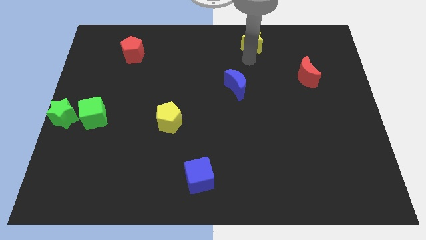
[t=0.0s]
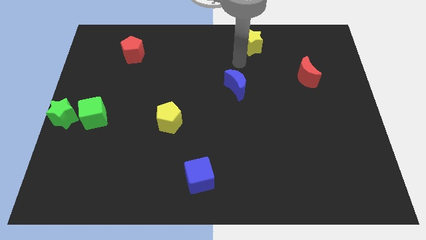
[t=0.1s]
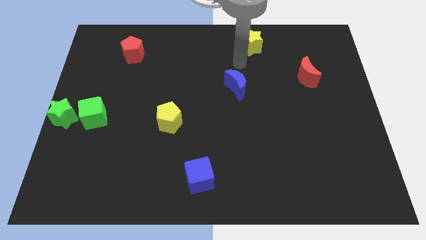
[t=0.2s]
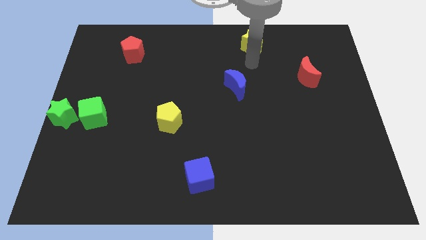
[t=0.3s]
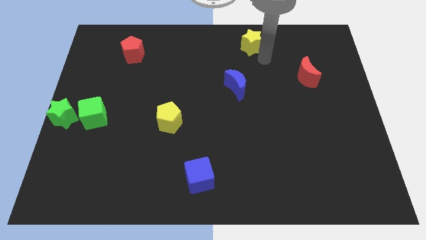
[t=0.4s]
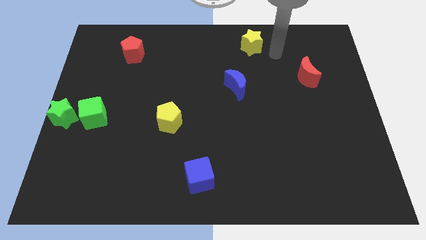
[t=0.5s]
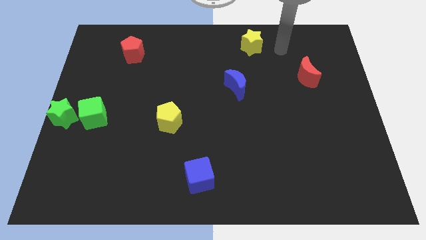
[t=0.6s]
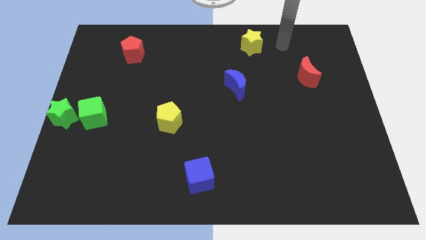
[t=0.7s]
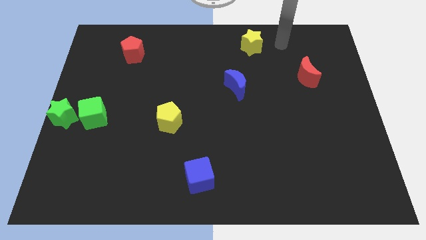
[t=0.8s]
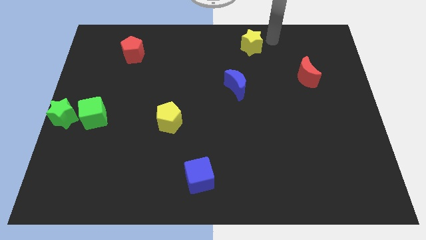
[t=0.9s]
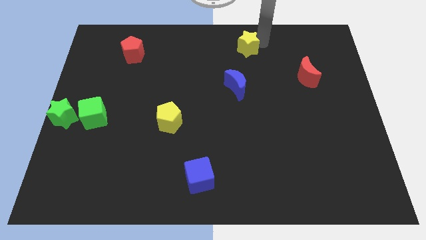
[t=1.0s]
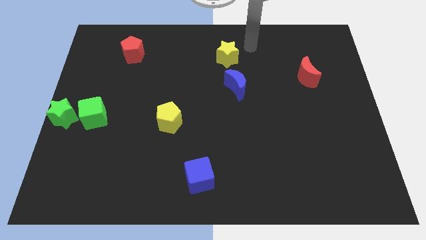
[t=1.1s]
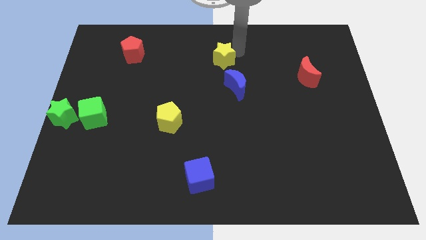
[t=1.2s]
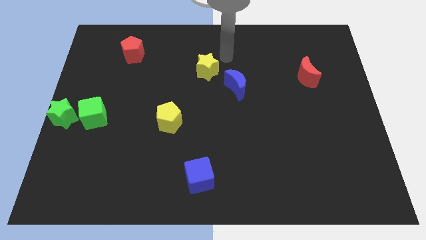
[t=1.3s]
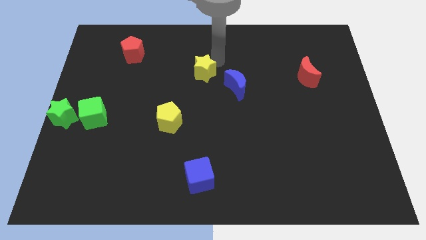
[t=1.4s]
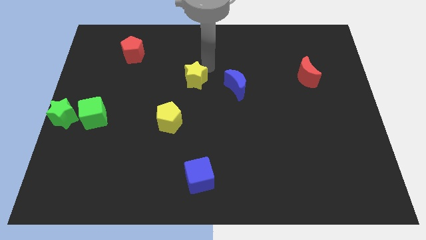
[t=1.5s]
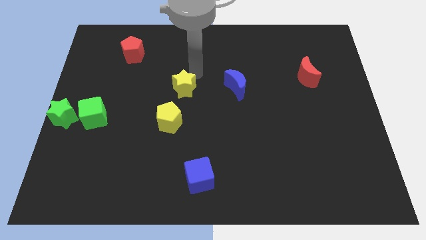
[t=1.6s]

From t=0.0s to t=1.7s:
move the yellow star to the left side of the blue moon

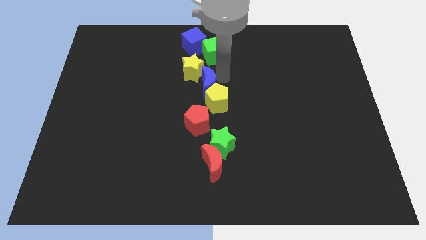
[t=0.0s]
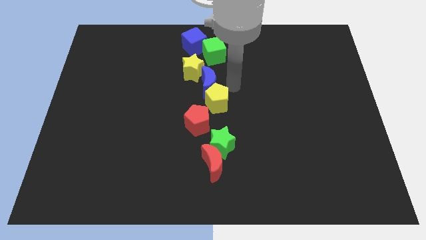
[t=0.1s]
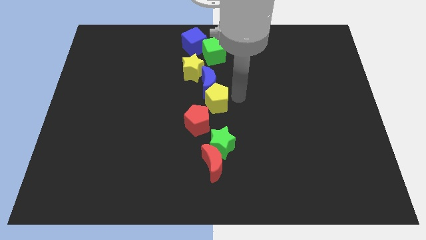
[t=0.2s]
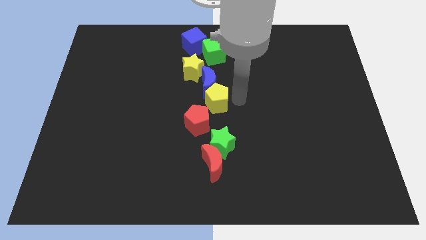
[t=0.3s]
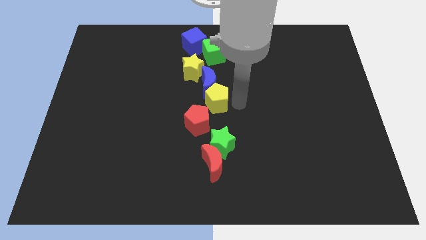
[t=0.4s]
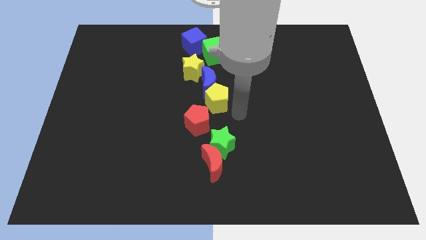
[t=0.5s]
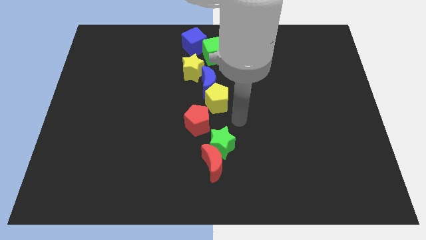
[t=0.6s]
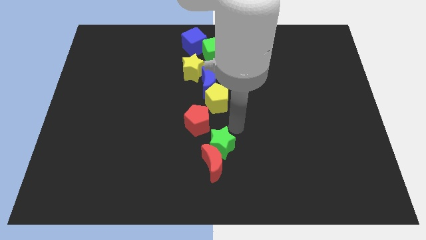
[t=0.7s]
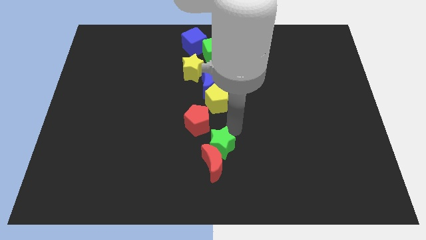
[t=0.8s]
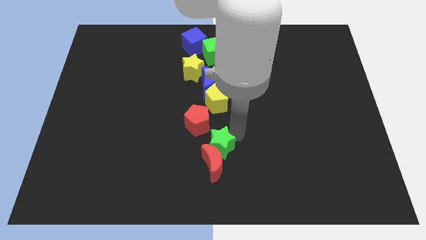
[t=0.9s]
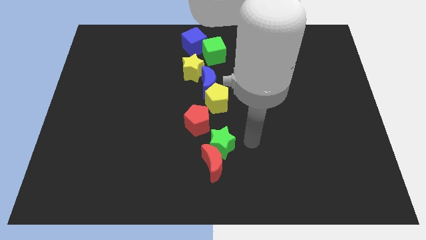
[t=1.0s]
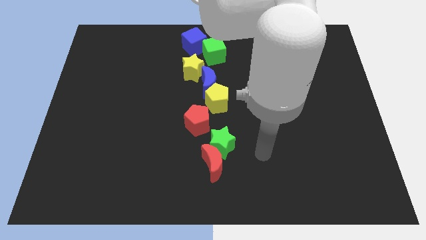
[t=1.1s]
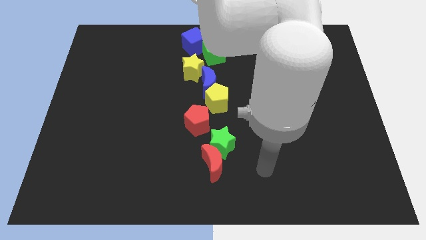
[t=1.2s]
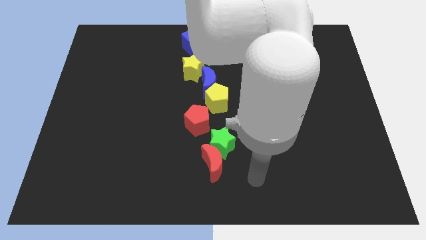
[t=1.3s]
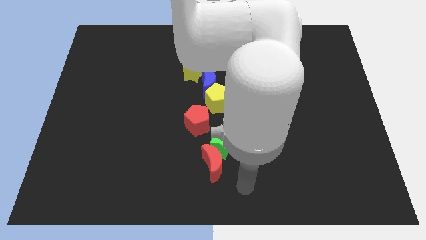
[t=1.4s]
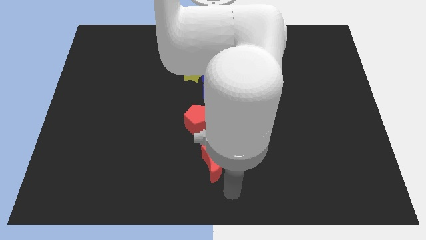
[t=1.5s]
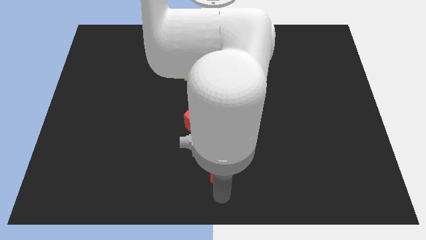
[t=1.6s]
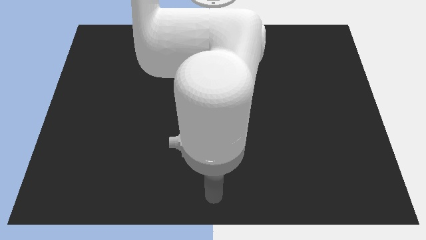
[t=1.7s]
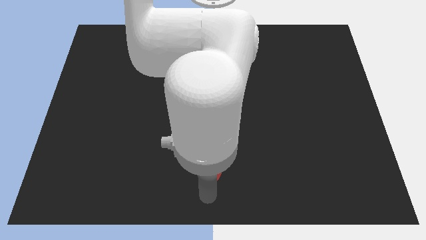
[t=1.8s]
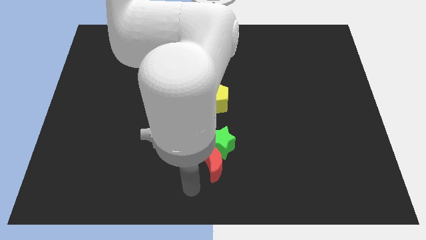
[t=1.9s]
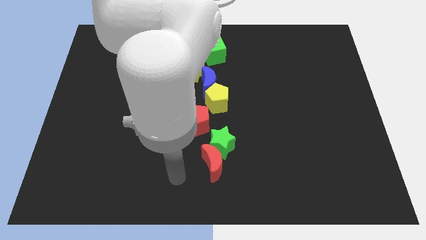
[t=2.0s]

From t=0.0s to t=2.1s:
move your arm to the left side of the red crescent

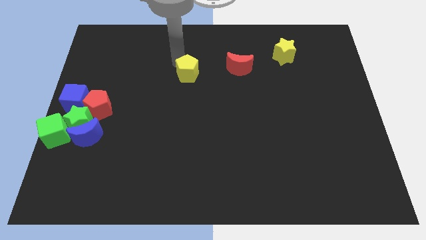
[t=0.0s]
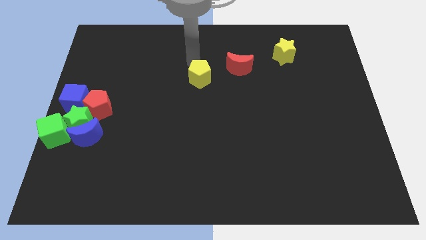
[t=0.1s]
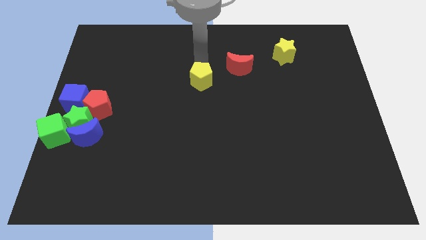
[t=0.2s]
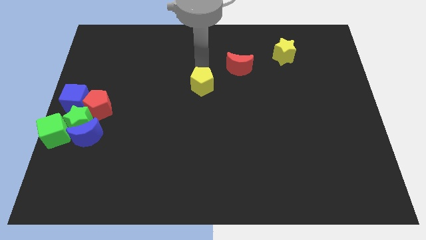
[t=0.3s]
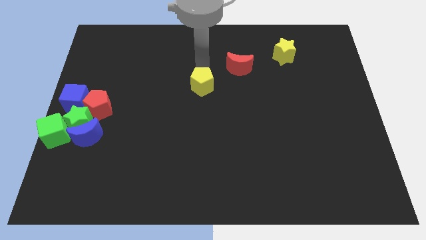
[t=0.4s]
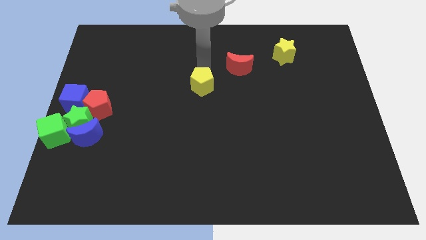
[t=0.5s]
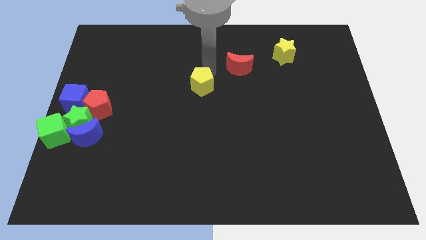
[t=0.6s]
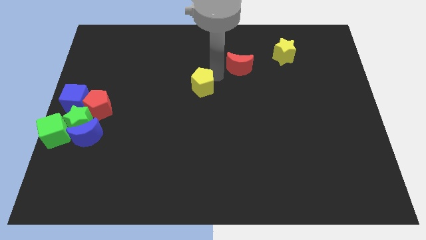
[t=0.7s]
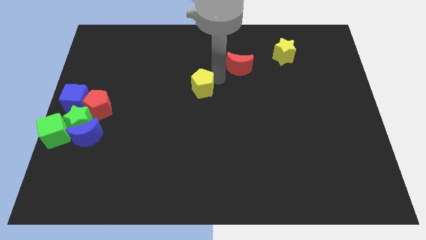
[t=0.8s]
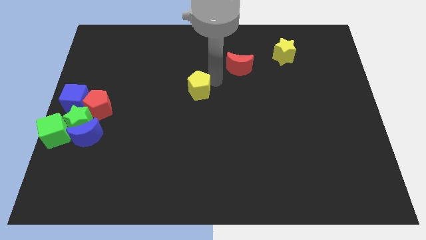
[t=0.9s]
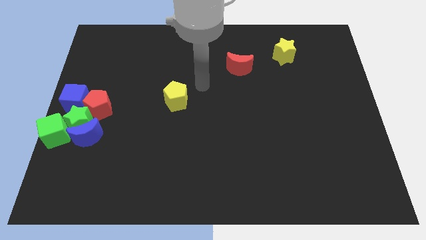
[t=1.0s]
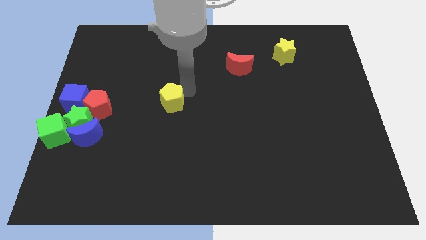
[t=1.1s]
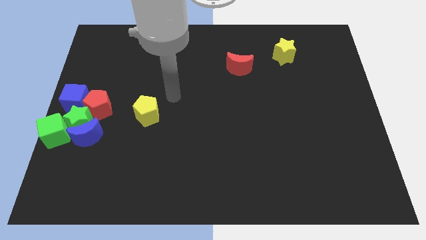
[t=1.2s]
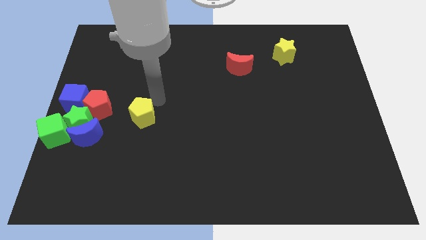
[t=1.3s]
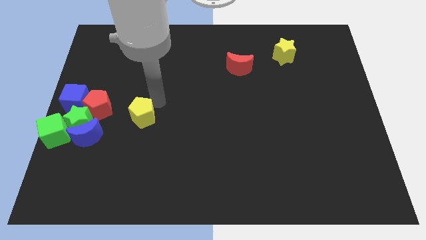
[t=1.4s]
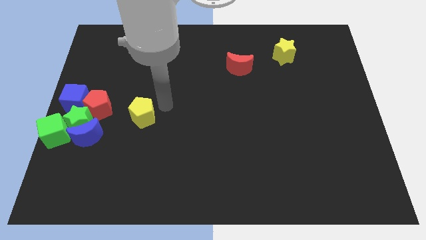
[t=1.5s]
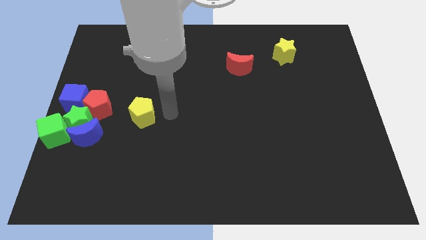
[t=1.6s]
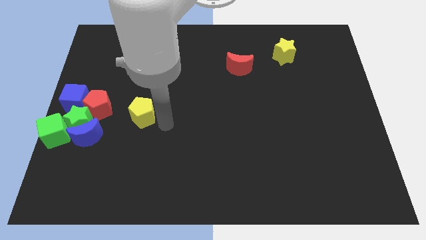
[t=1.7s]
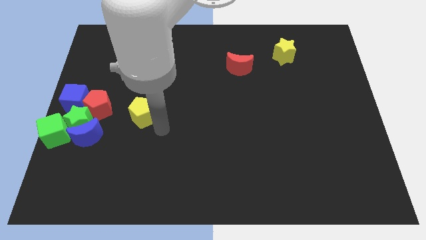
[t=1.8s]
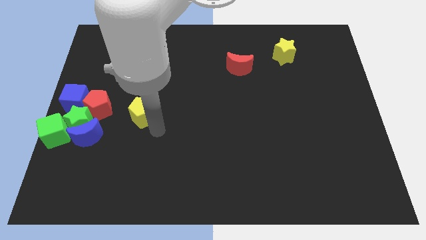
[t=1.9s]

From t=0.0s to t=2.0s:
slide the yellow pentagon towards the group of blocks

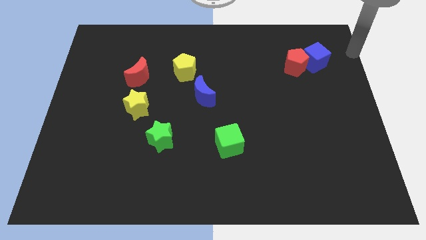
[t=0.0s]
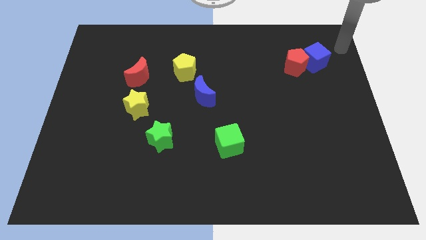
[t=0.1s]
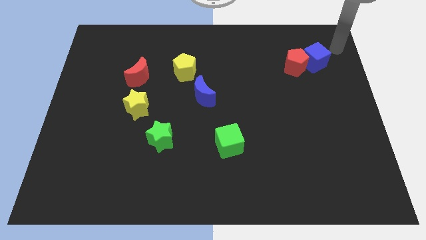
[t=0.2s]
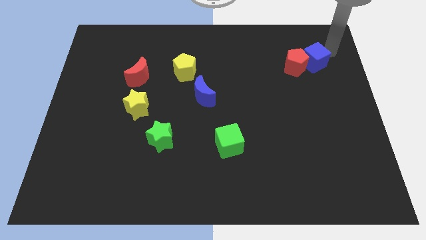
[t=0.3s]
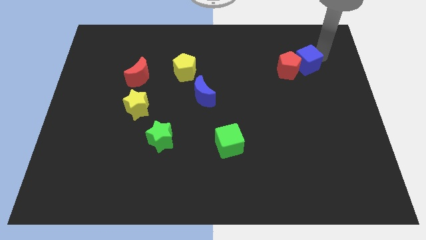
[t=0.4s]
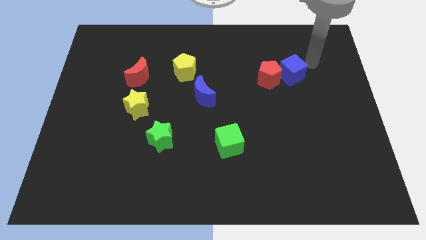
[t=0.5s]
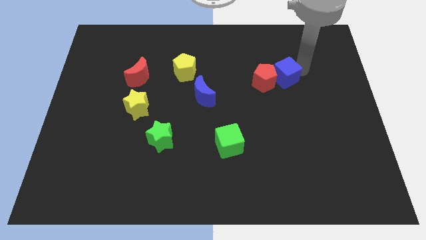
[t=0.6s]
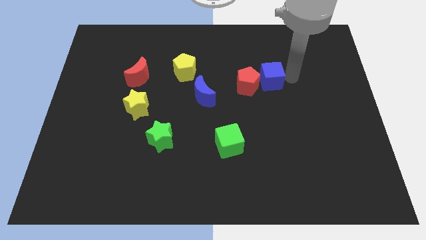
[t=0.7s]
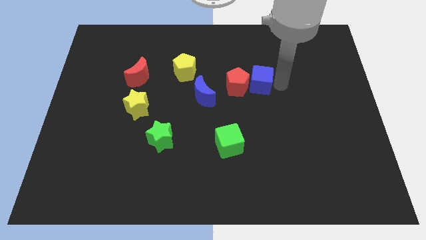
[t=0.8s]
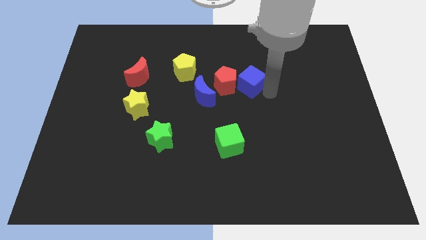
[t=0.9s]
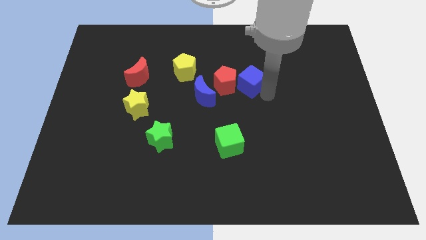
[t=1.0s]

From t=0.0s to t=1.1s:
move the green cube and red pentagon right beside the blue moon

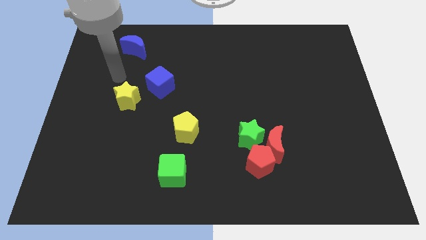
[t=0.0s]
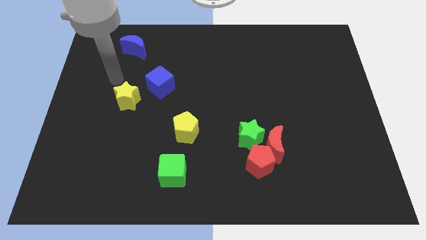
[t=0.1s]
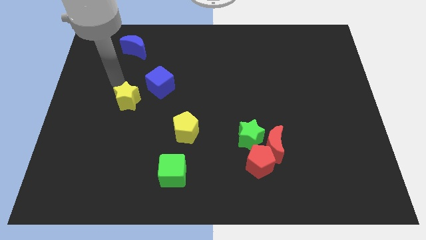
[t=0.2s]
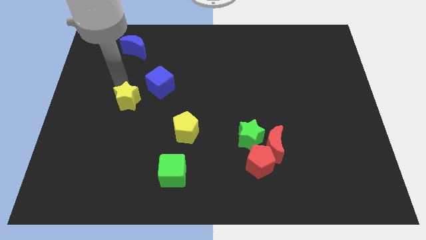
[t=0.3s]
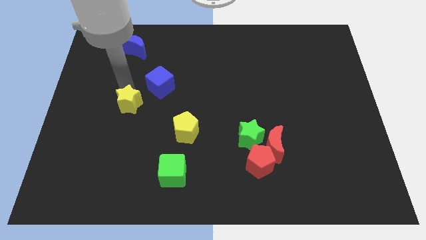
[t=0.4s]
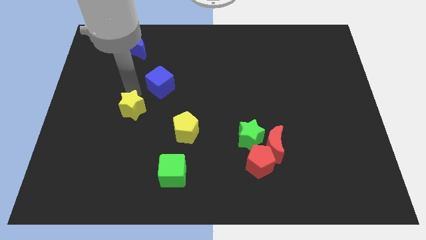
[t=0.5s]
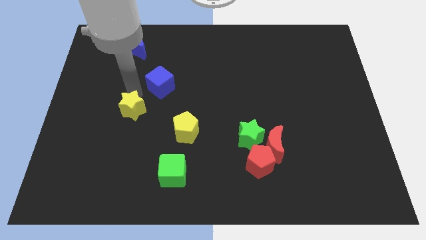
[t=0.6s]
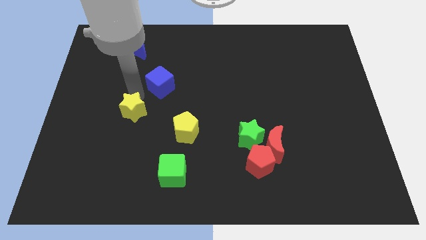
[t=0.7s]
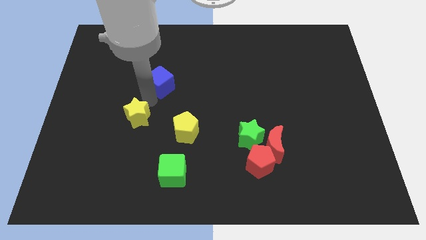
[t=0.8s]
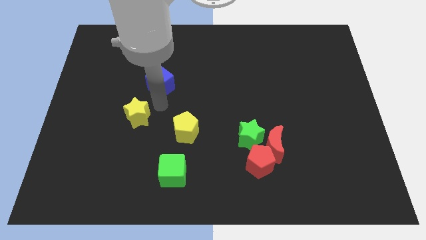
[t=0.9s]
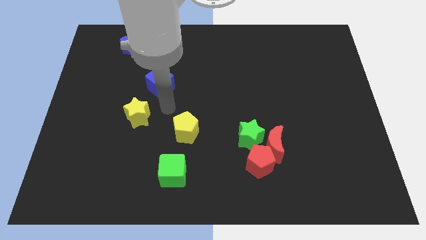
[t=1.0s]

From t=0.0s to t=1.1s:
place the yellow star below the blue cube

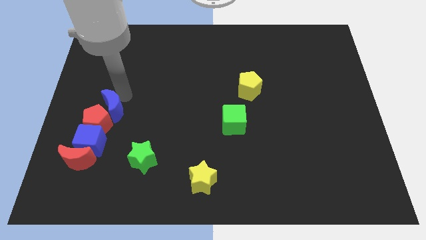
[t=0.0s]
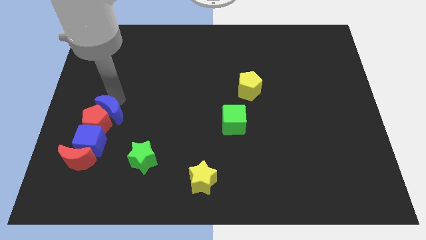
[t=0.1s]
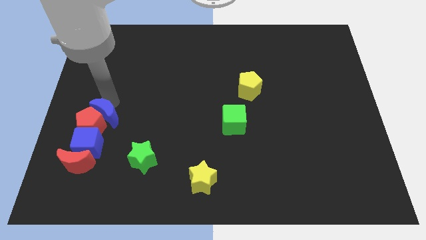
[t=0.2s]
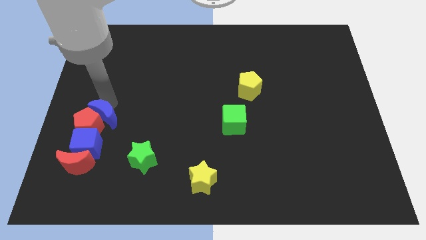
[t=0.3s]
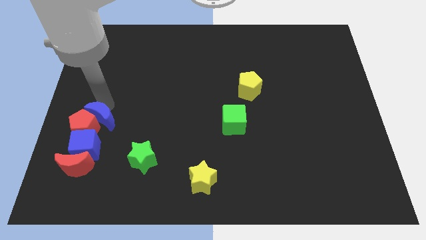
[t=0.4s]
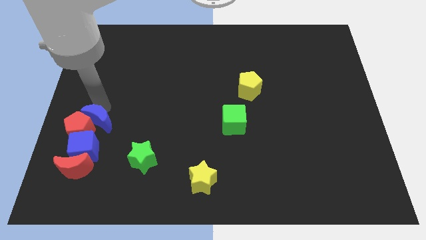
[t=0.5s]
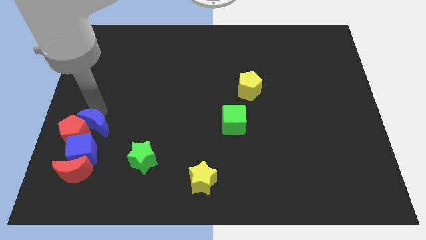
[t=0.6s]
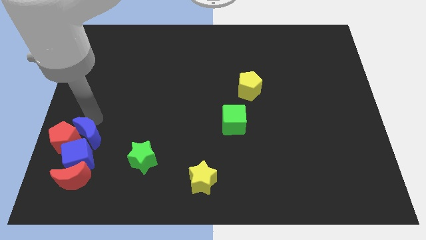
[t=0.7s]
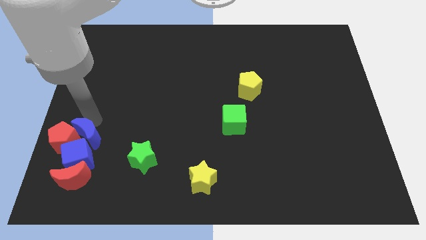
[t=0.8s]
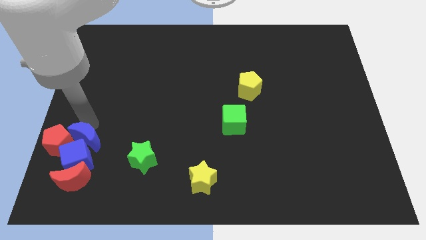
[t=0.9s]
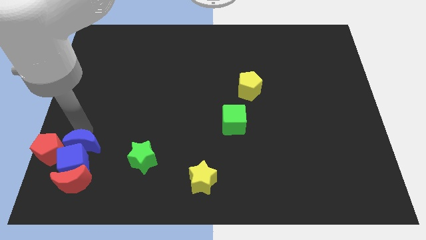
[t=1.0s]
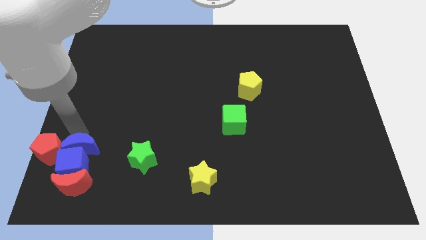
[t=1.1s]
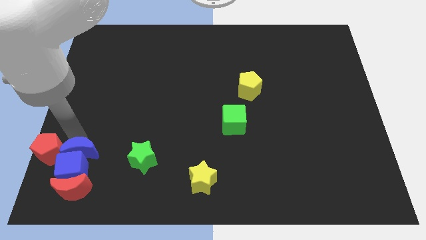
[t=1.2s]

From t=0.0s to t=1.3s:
place the blue crescent above the blue cube
